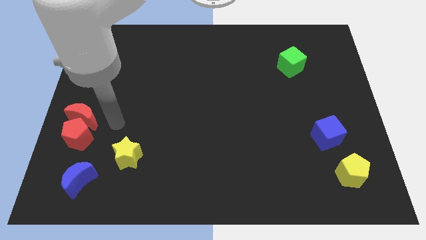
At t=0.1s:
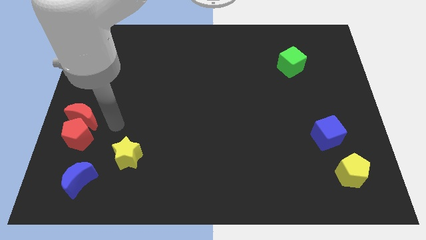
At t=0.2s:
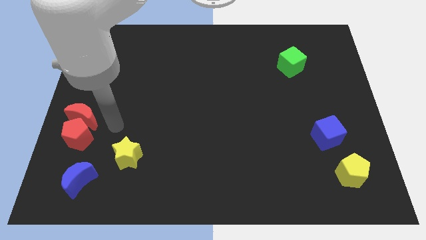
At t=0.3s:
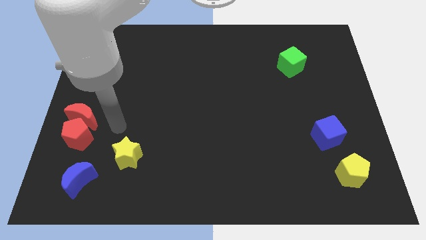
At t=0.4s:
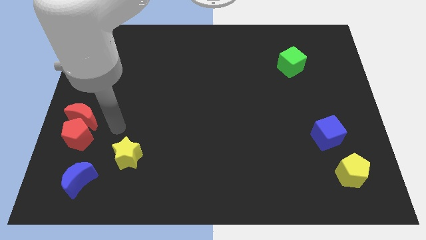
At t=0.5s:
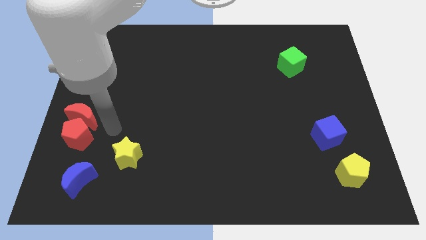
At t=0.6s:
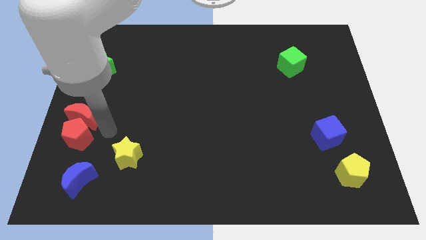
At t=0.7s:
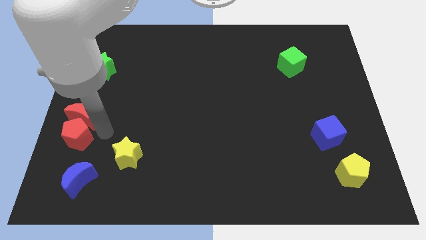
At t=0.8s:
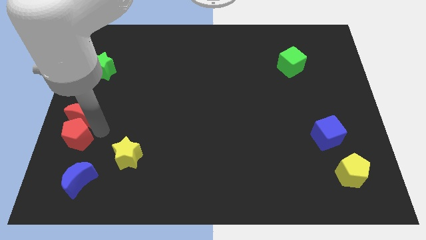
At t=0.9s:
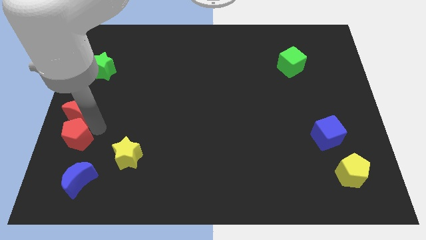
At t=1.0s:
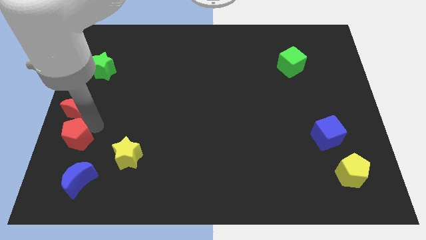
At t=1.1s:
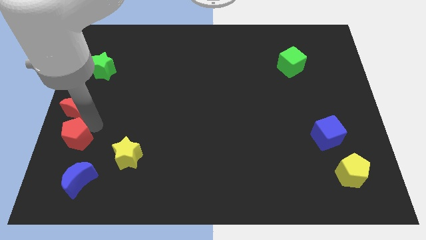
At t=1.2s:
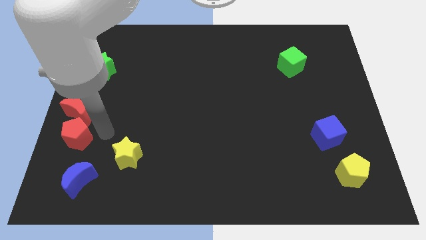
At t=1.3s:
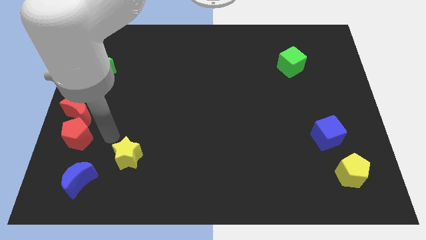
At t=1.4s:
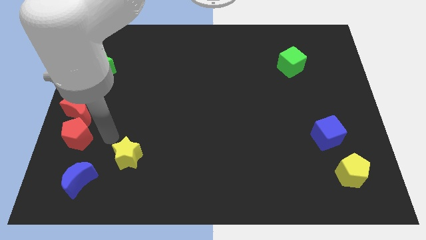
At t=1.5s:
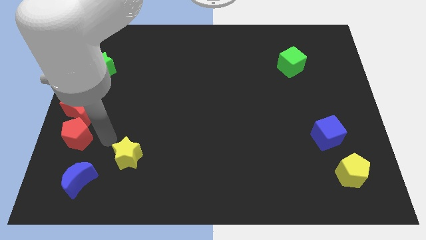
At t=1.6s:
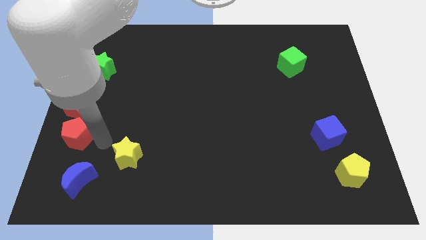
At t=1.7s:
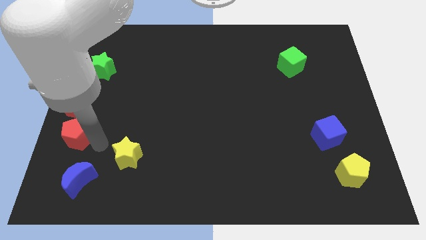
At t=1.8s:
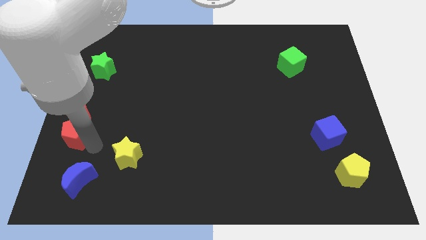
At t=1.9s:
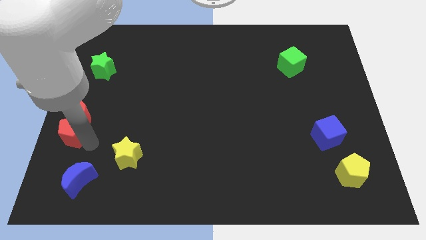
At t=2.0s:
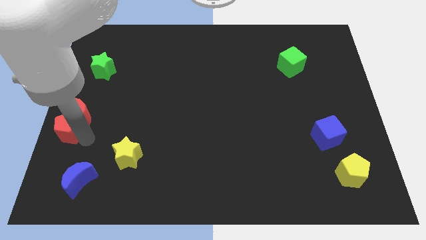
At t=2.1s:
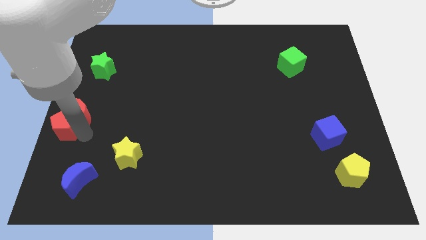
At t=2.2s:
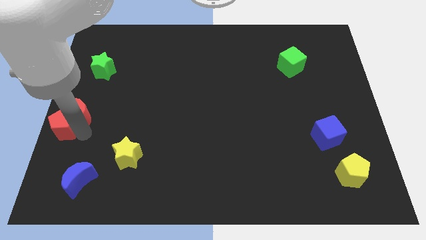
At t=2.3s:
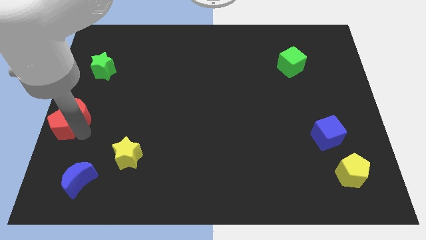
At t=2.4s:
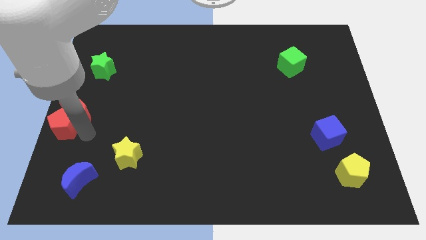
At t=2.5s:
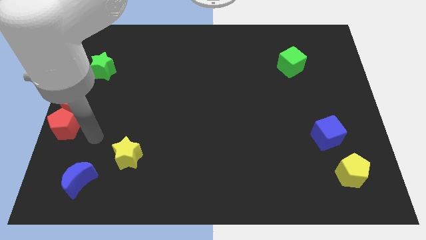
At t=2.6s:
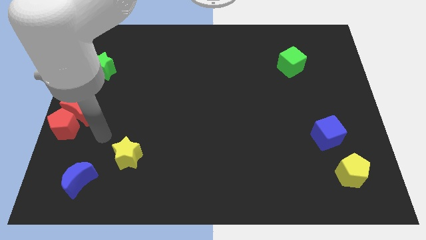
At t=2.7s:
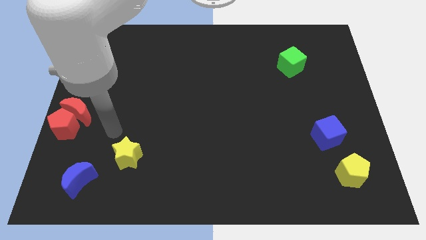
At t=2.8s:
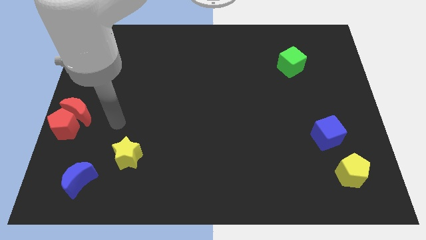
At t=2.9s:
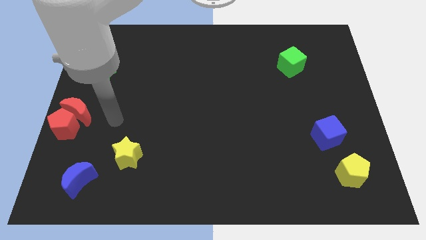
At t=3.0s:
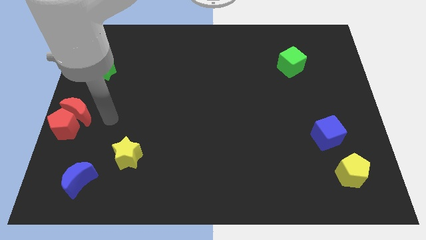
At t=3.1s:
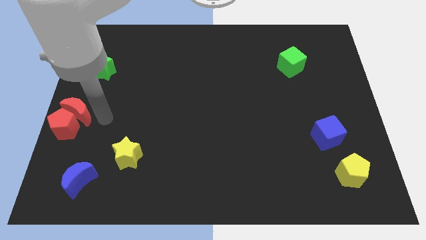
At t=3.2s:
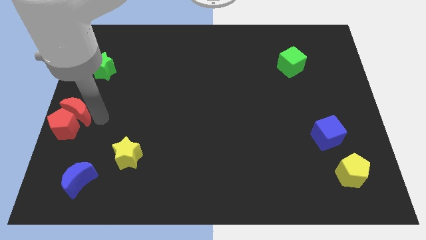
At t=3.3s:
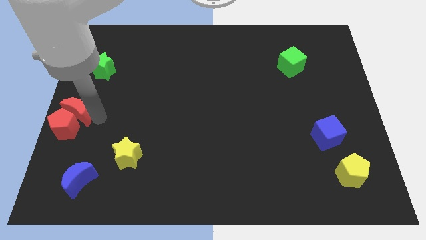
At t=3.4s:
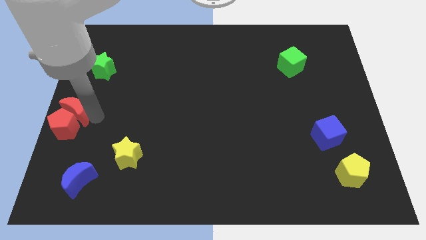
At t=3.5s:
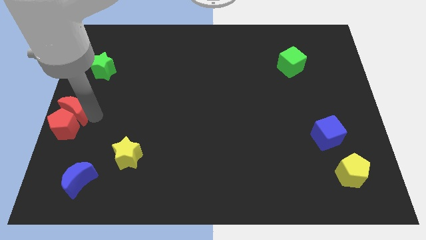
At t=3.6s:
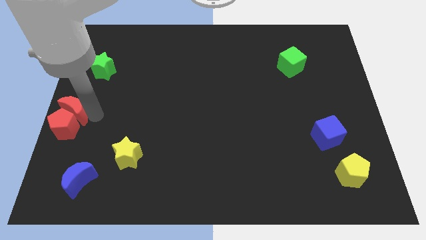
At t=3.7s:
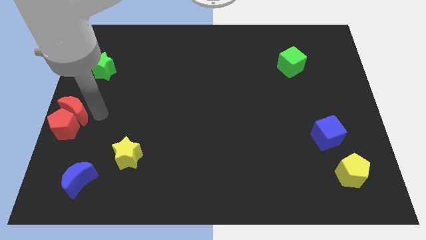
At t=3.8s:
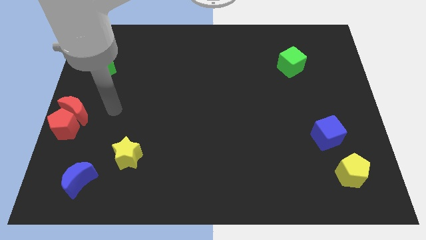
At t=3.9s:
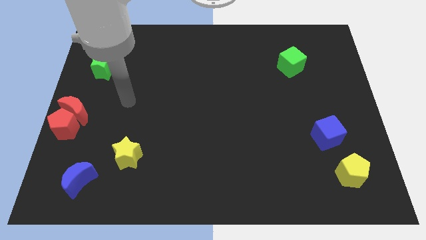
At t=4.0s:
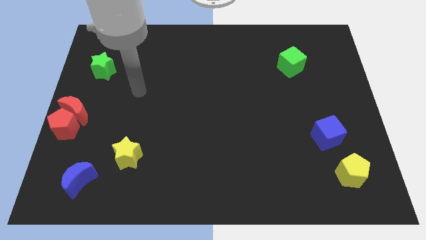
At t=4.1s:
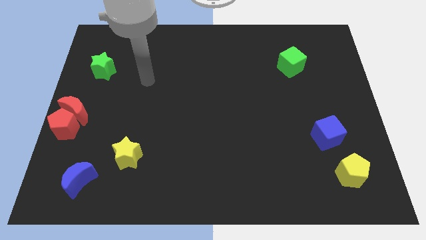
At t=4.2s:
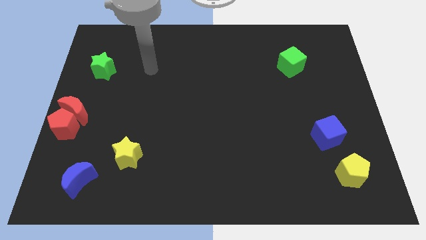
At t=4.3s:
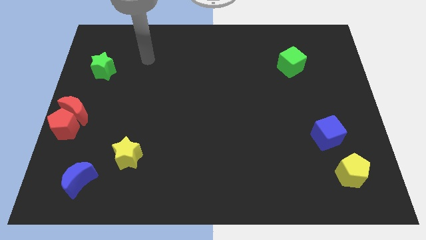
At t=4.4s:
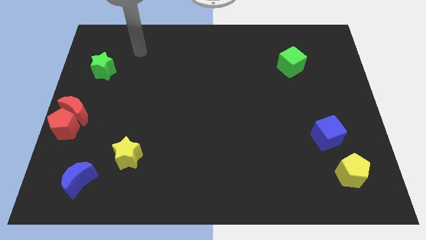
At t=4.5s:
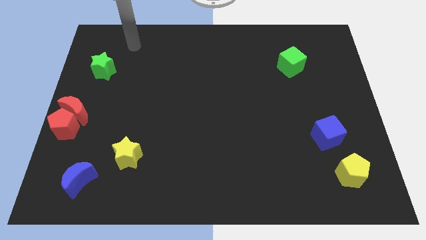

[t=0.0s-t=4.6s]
adjust the red blocks at the center left

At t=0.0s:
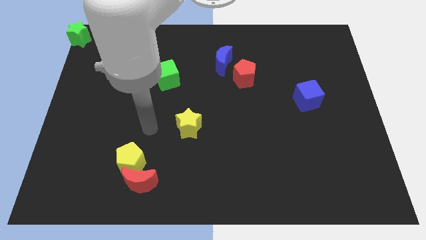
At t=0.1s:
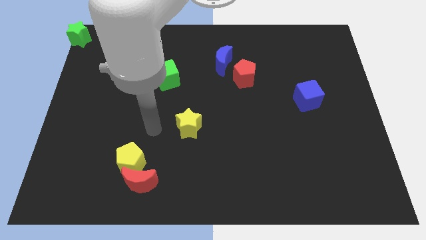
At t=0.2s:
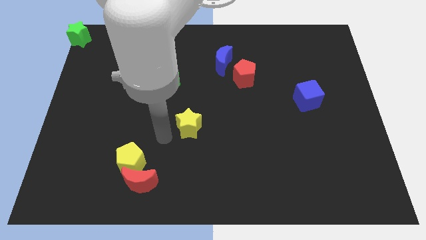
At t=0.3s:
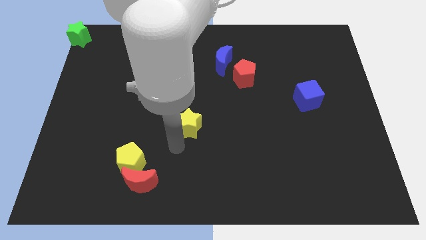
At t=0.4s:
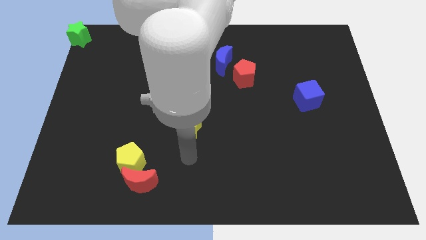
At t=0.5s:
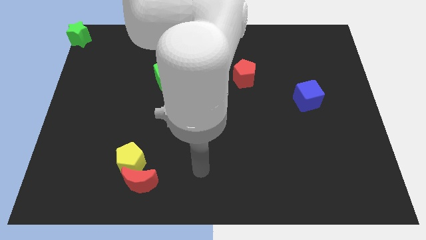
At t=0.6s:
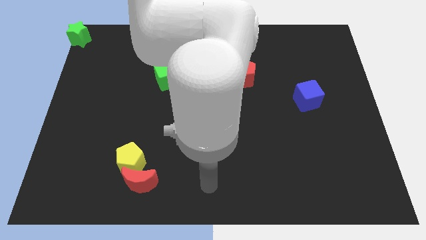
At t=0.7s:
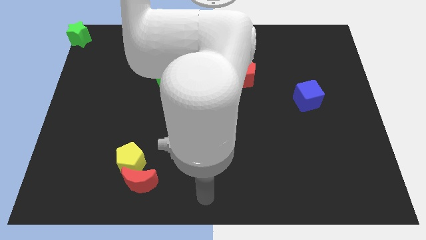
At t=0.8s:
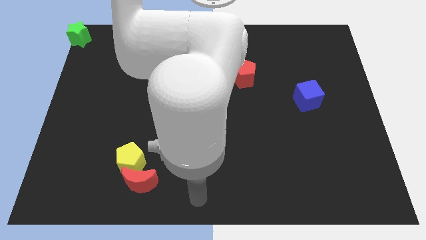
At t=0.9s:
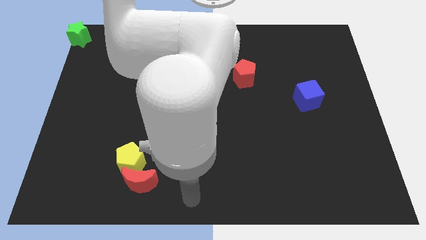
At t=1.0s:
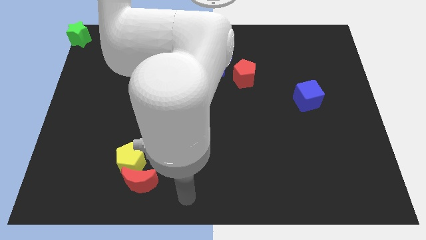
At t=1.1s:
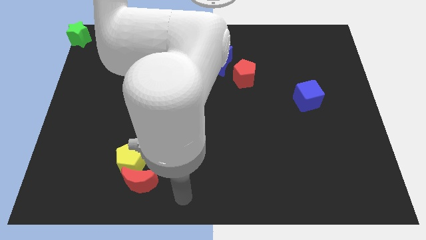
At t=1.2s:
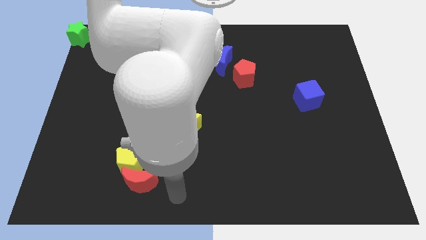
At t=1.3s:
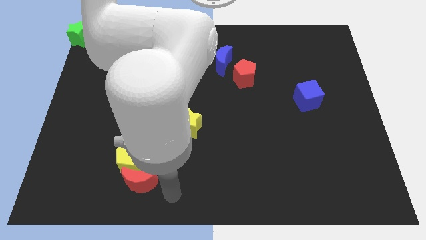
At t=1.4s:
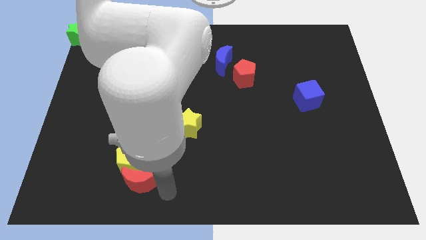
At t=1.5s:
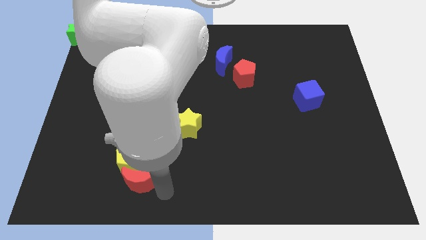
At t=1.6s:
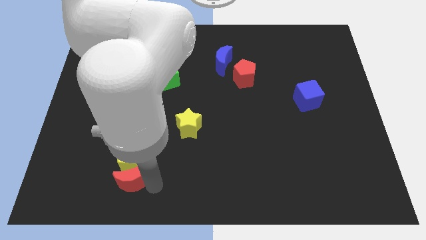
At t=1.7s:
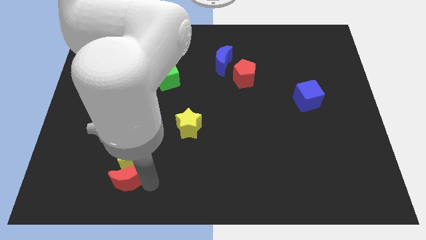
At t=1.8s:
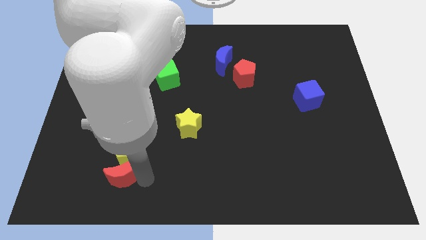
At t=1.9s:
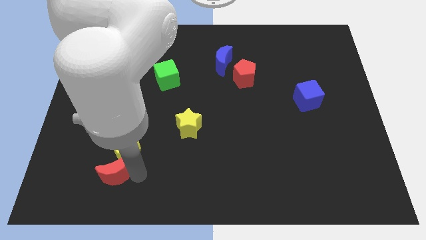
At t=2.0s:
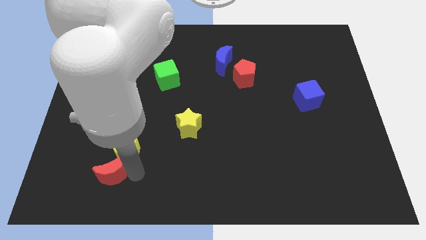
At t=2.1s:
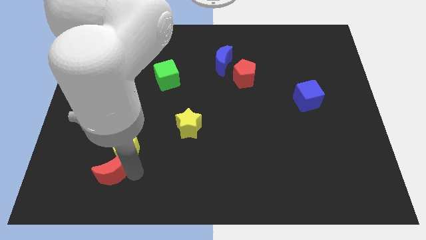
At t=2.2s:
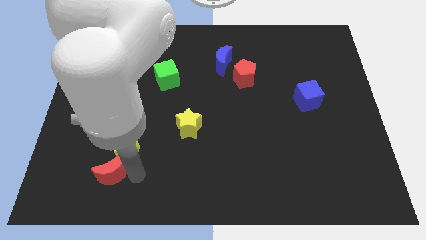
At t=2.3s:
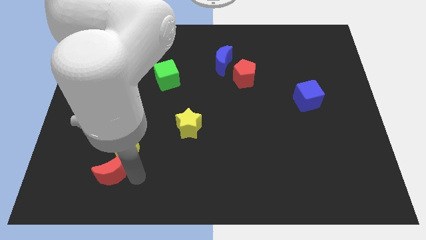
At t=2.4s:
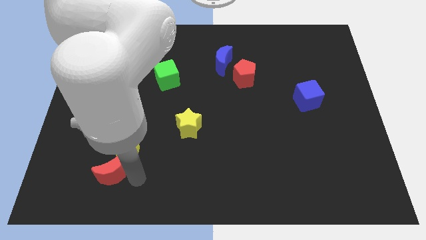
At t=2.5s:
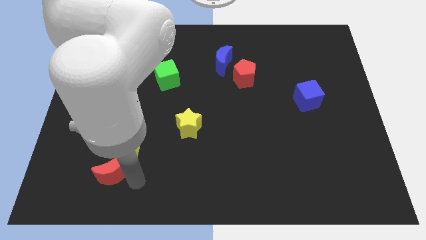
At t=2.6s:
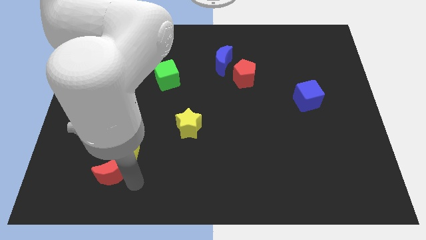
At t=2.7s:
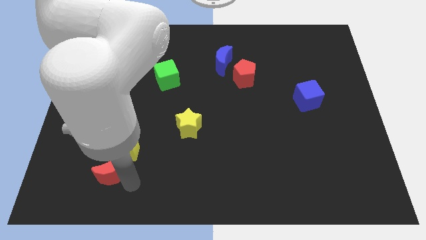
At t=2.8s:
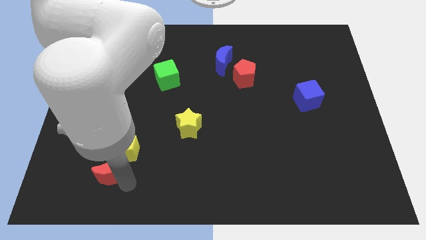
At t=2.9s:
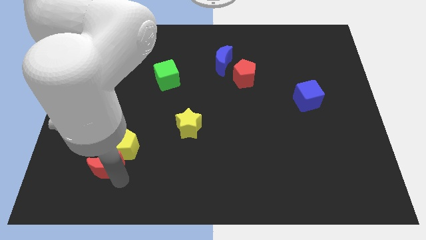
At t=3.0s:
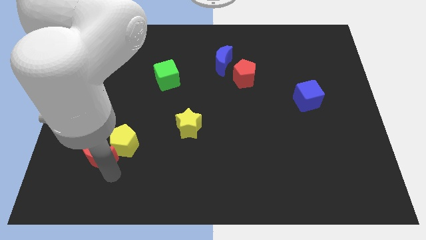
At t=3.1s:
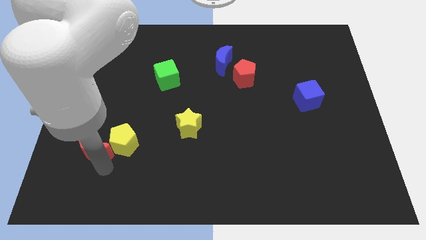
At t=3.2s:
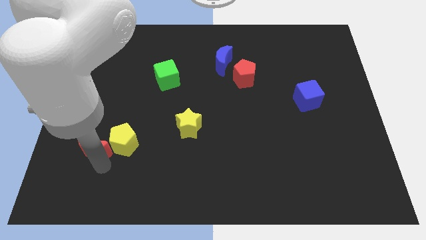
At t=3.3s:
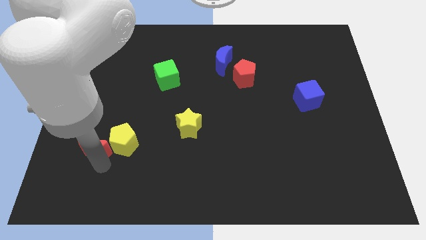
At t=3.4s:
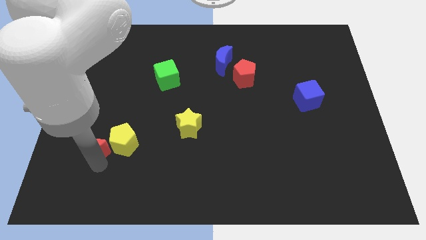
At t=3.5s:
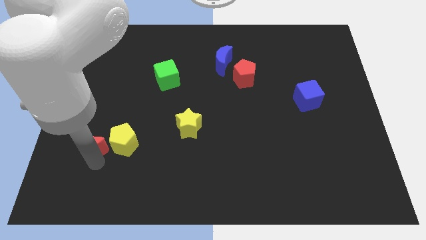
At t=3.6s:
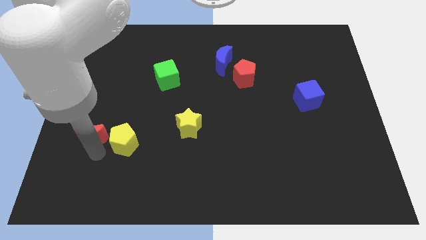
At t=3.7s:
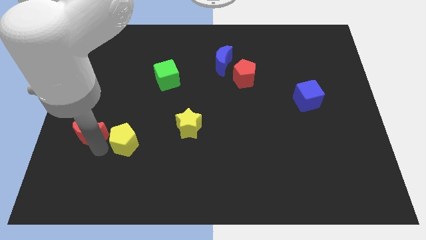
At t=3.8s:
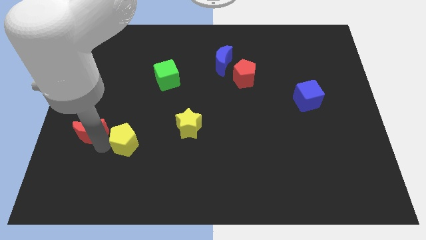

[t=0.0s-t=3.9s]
place red moon to the left of yellow pentagon

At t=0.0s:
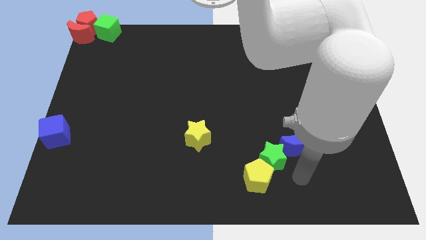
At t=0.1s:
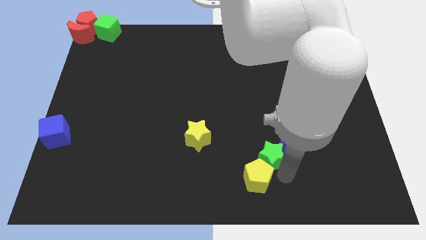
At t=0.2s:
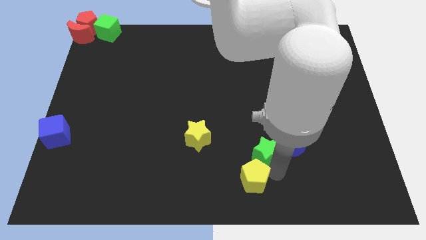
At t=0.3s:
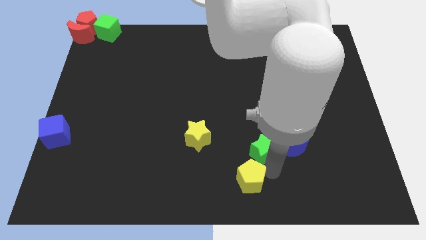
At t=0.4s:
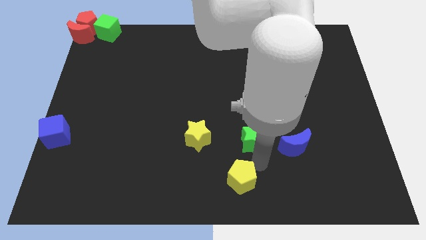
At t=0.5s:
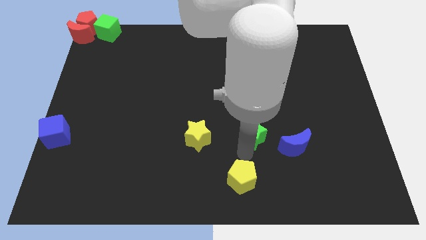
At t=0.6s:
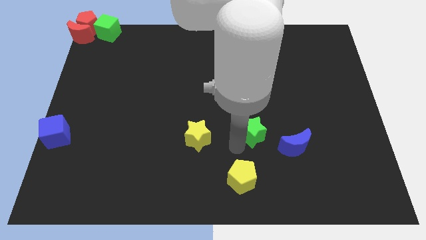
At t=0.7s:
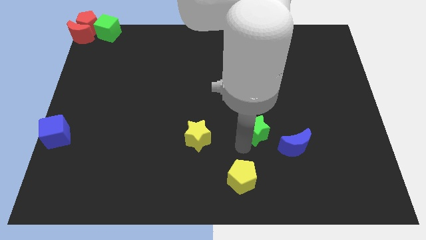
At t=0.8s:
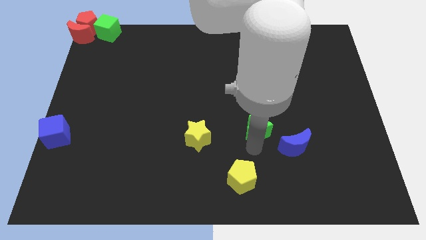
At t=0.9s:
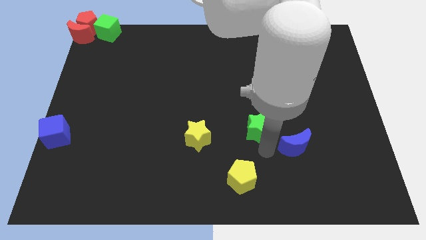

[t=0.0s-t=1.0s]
separate green star from blue moon and yellow pentagon
